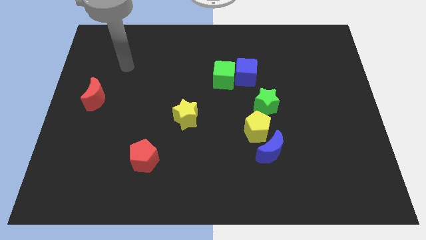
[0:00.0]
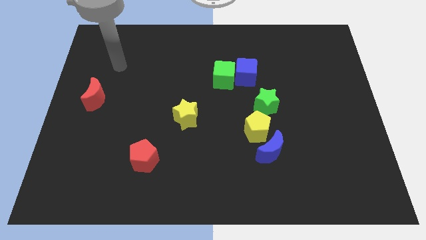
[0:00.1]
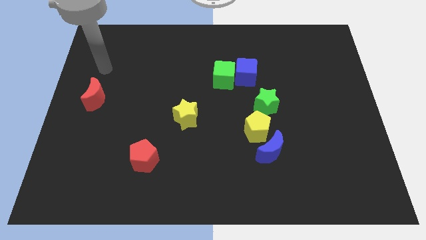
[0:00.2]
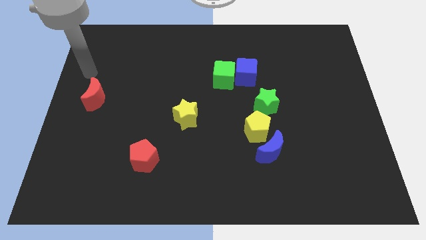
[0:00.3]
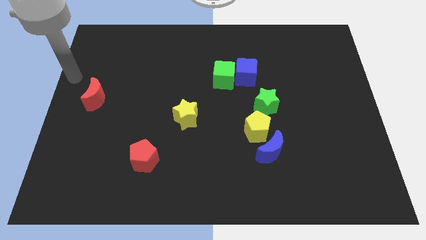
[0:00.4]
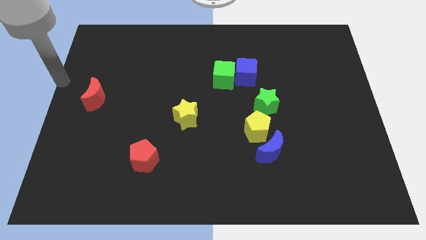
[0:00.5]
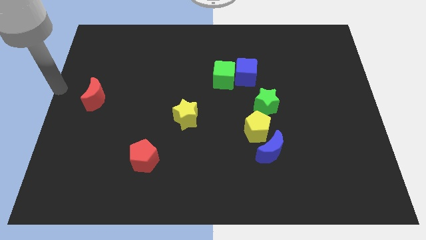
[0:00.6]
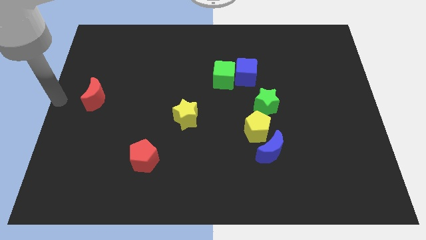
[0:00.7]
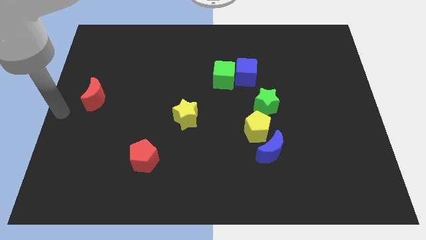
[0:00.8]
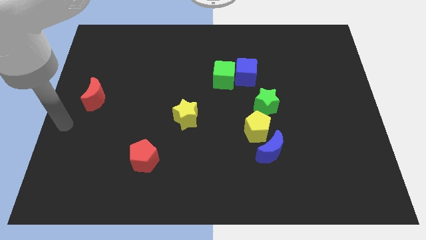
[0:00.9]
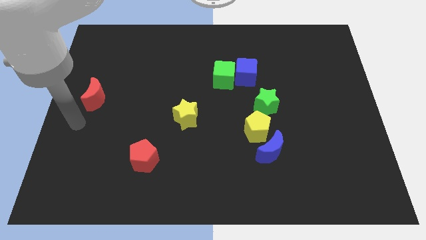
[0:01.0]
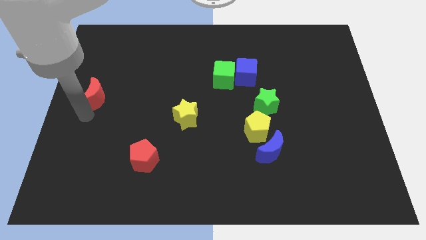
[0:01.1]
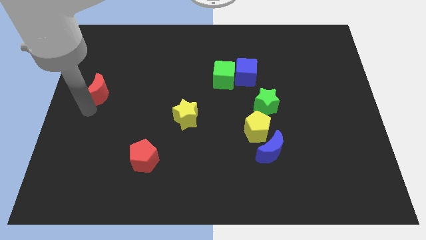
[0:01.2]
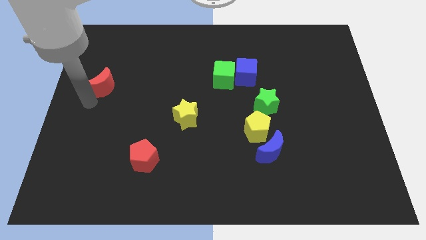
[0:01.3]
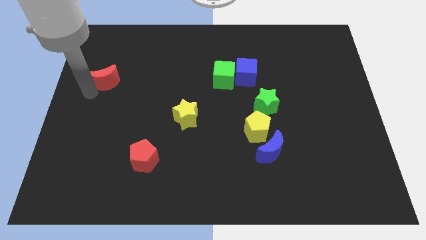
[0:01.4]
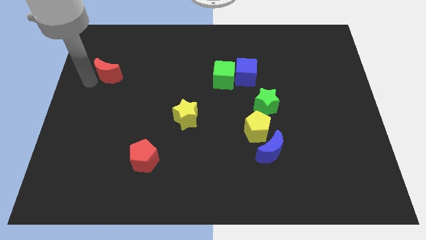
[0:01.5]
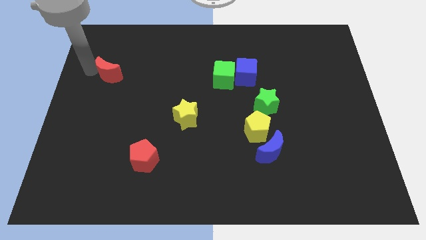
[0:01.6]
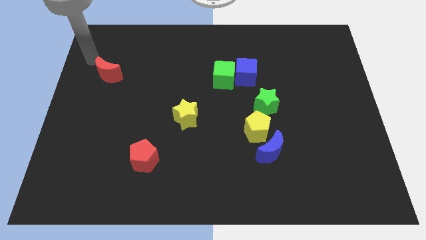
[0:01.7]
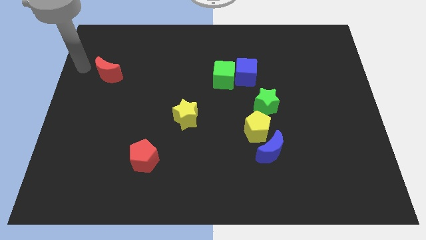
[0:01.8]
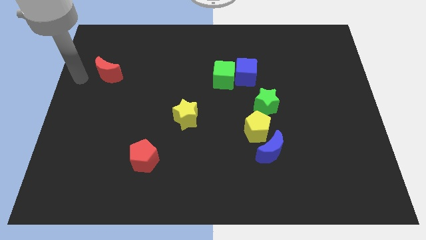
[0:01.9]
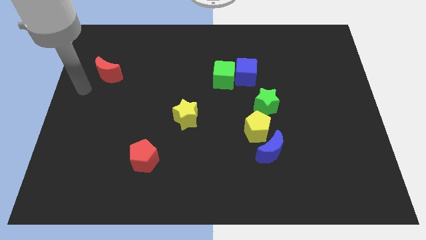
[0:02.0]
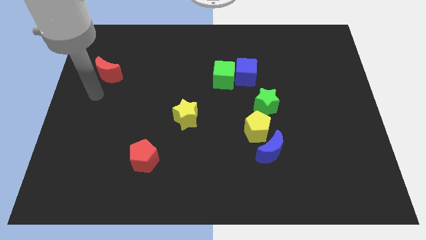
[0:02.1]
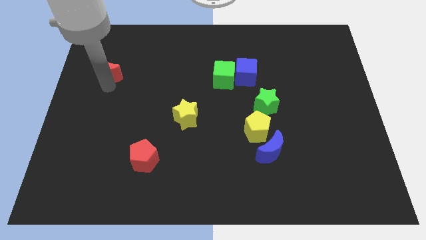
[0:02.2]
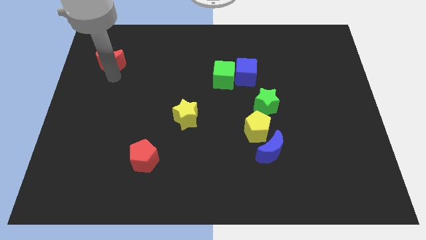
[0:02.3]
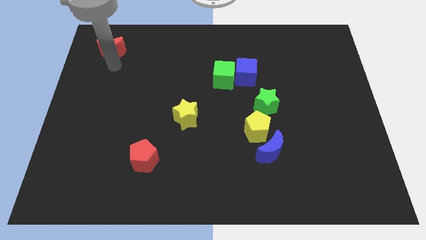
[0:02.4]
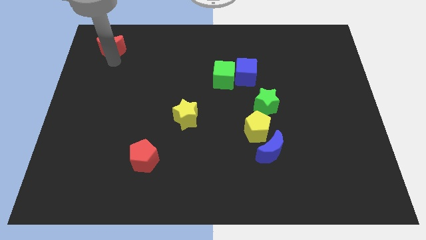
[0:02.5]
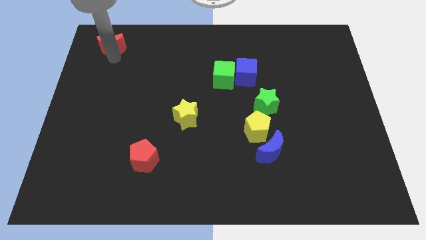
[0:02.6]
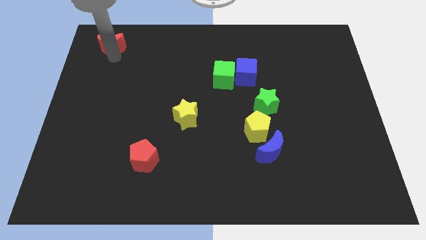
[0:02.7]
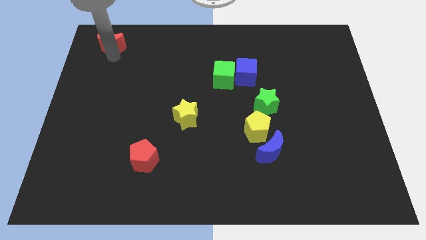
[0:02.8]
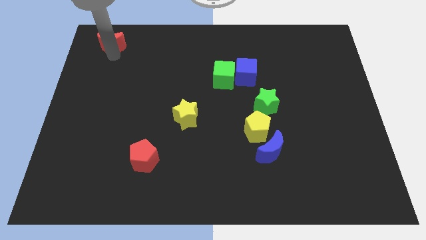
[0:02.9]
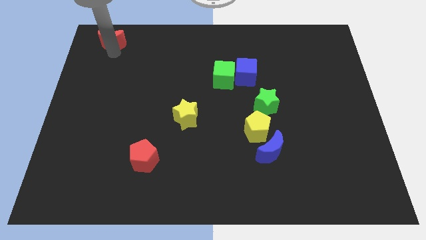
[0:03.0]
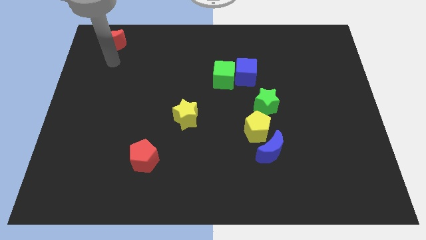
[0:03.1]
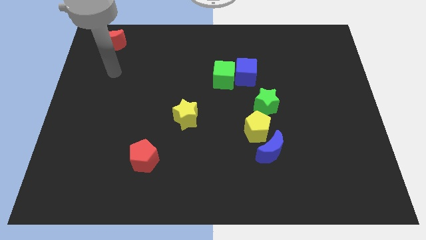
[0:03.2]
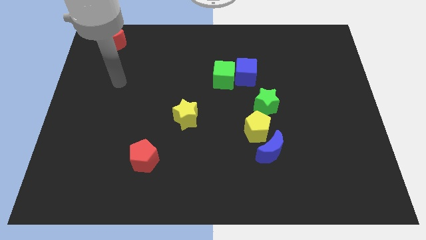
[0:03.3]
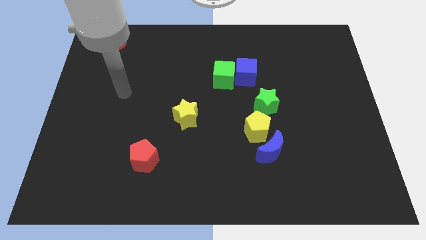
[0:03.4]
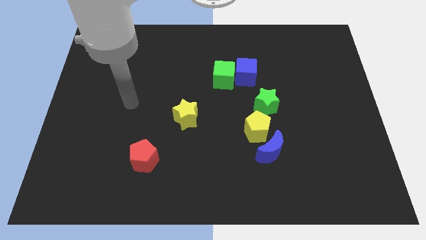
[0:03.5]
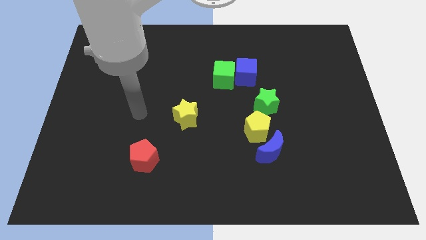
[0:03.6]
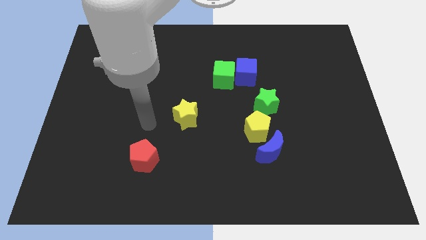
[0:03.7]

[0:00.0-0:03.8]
move red moon to the top left

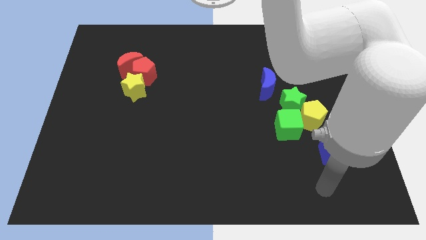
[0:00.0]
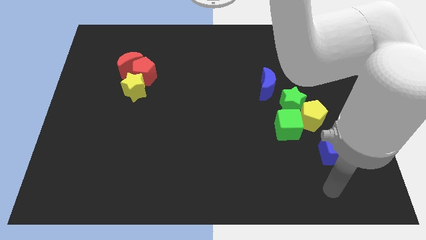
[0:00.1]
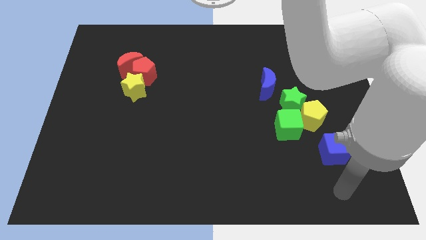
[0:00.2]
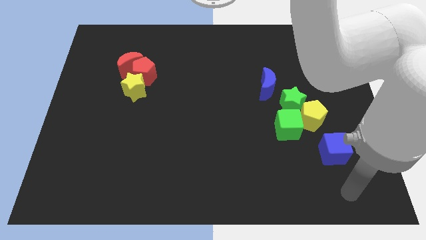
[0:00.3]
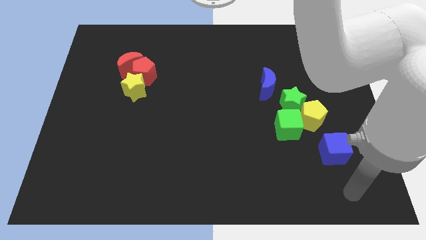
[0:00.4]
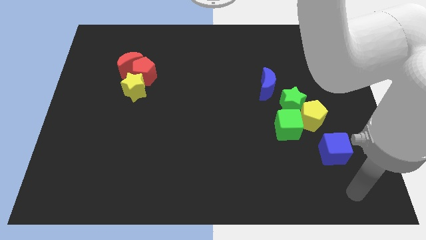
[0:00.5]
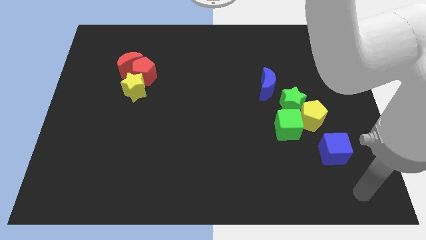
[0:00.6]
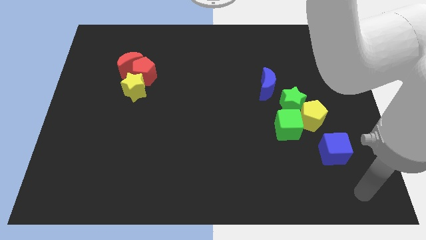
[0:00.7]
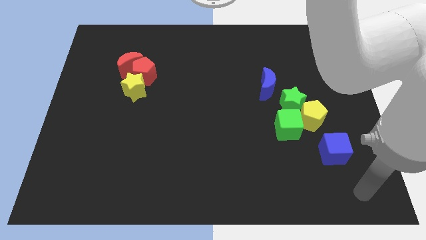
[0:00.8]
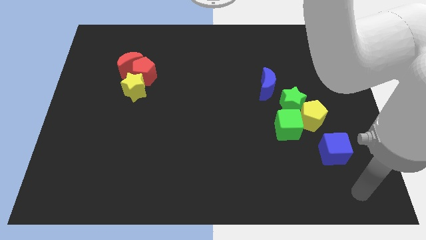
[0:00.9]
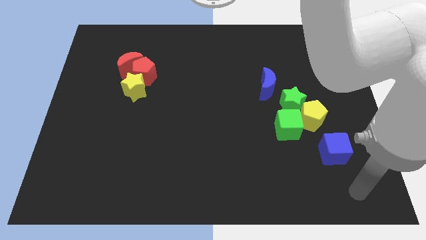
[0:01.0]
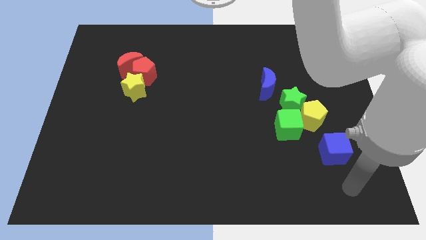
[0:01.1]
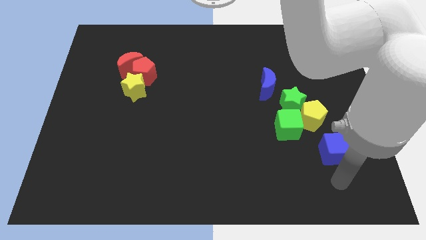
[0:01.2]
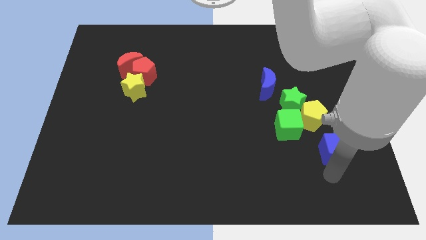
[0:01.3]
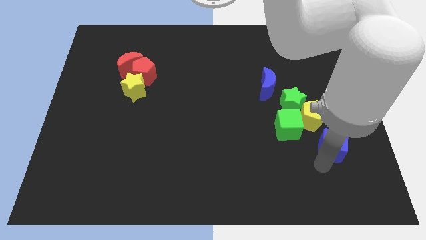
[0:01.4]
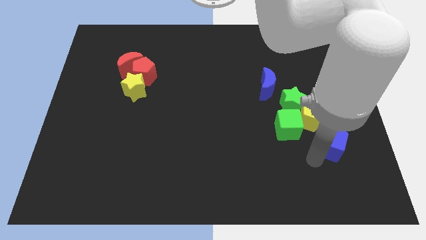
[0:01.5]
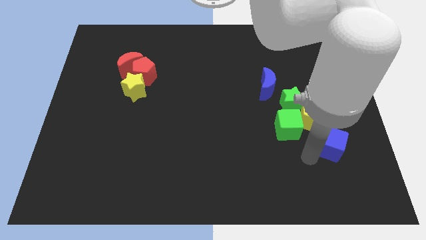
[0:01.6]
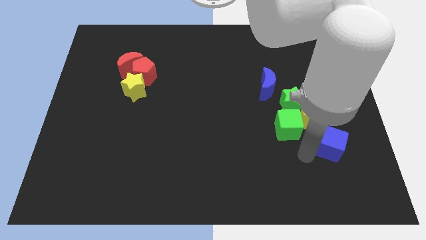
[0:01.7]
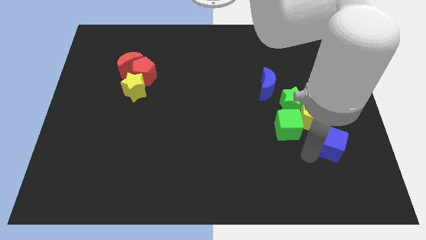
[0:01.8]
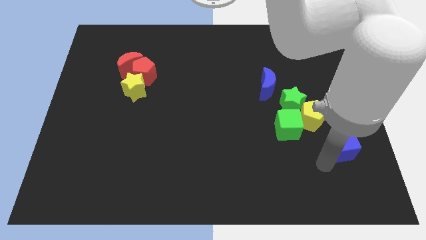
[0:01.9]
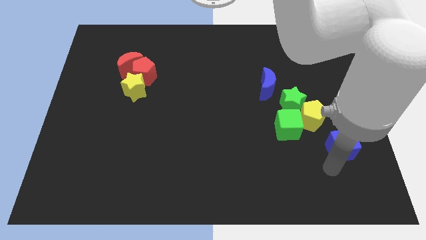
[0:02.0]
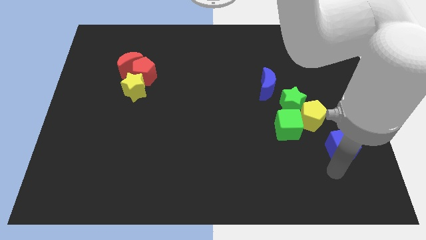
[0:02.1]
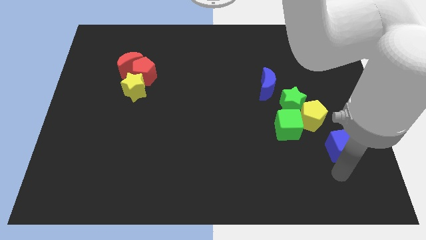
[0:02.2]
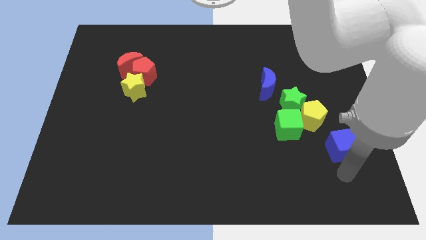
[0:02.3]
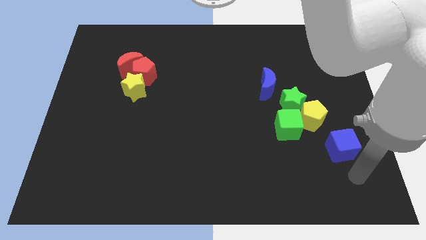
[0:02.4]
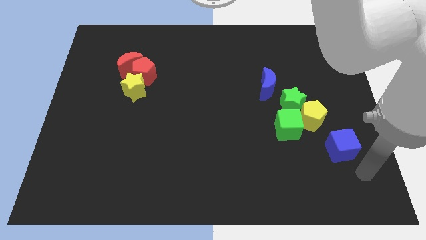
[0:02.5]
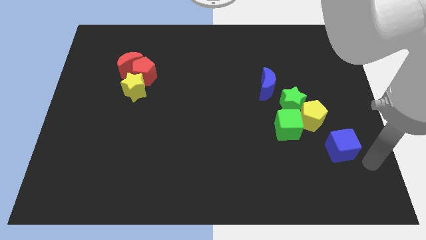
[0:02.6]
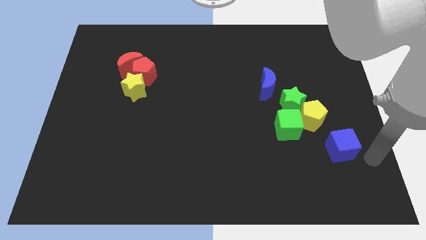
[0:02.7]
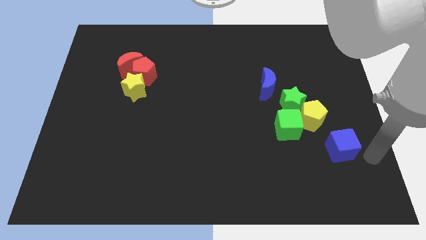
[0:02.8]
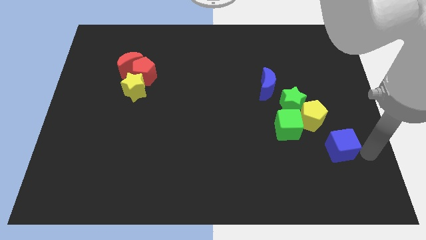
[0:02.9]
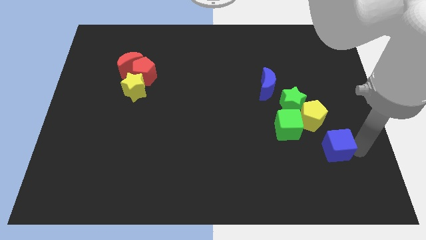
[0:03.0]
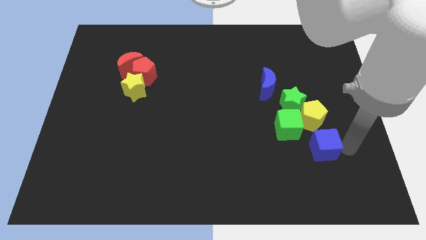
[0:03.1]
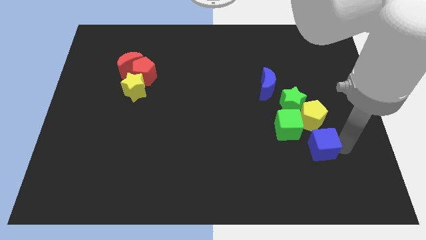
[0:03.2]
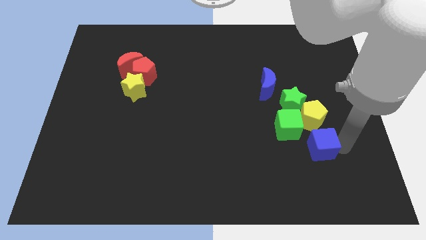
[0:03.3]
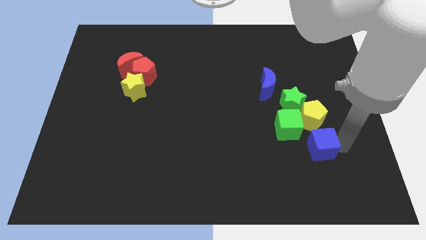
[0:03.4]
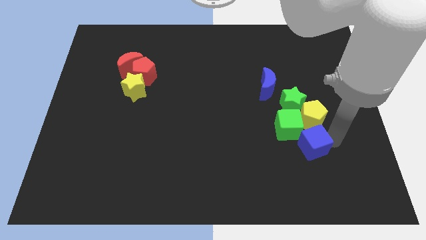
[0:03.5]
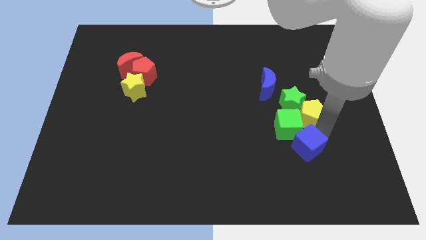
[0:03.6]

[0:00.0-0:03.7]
move the blue cube into the green cube

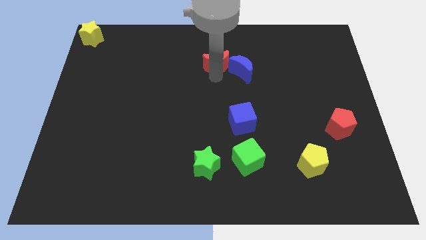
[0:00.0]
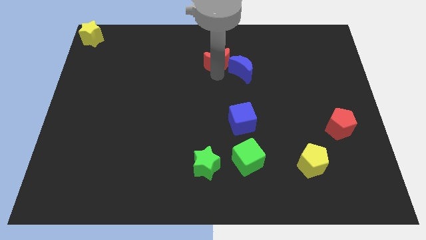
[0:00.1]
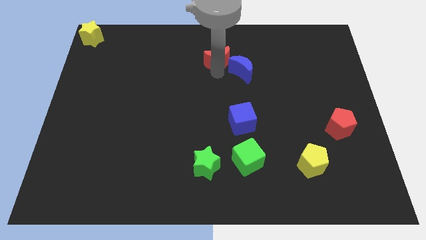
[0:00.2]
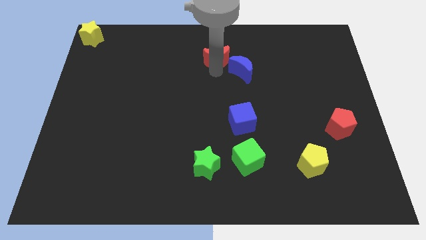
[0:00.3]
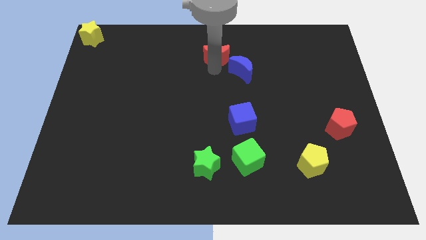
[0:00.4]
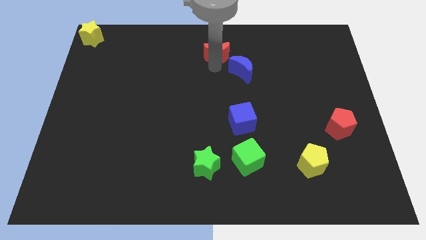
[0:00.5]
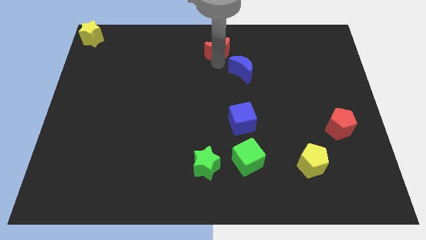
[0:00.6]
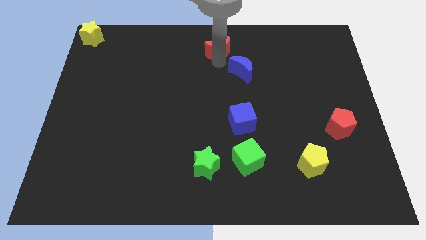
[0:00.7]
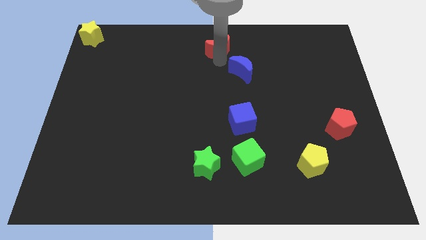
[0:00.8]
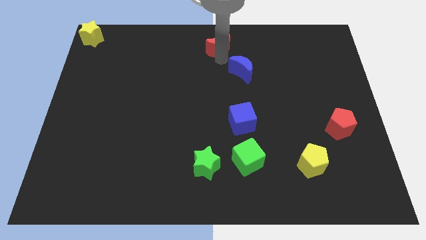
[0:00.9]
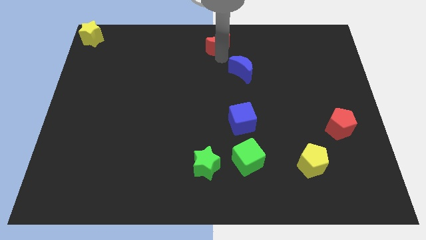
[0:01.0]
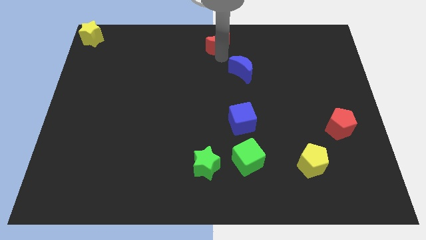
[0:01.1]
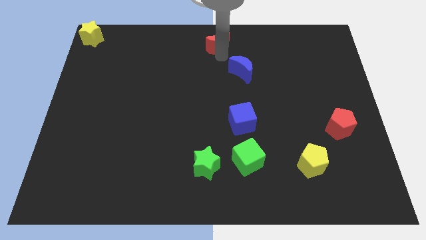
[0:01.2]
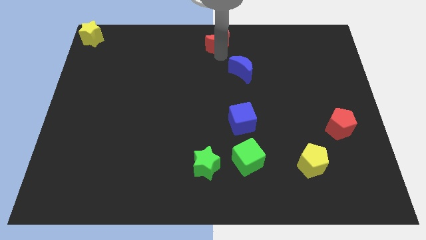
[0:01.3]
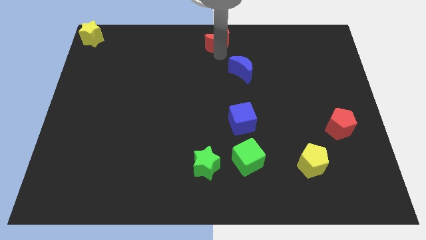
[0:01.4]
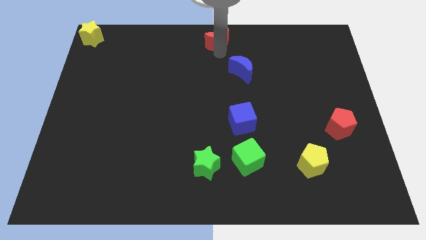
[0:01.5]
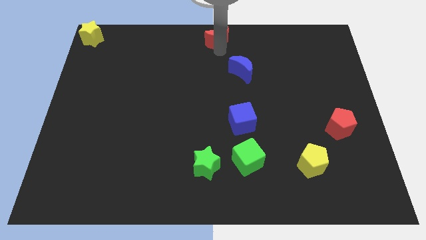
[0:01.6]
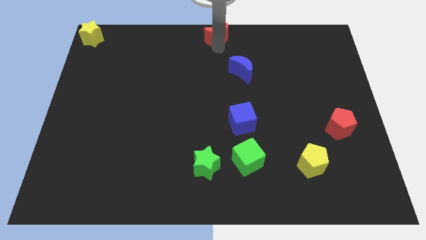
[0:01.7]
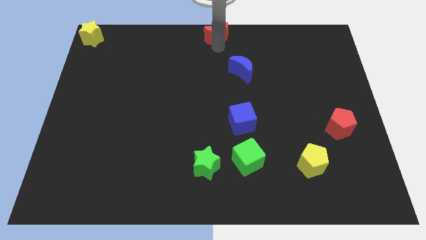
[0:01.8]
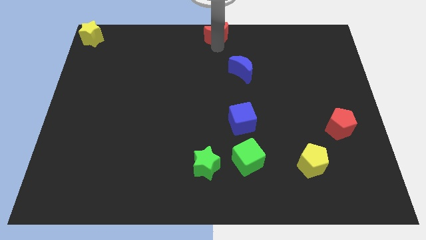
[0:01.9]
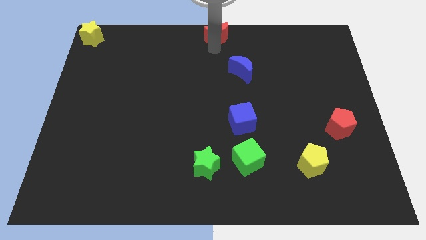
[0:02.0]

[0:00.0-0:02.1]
push the red crescent to the top center of the board
